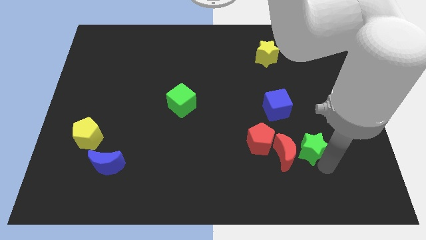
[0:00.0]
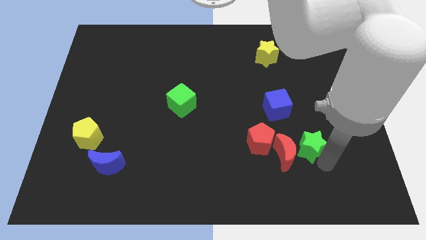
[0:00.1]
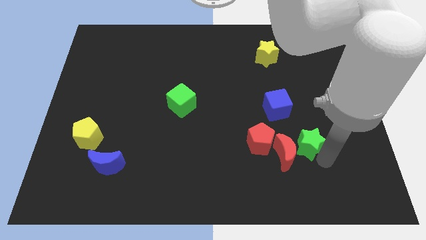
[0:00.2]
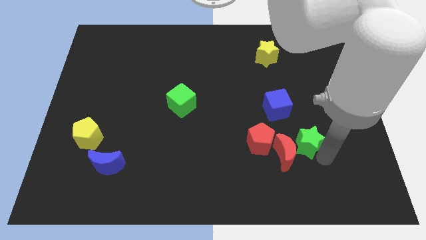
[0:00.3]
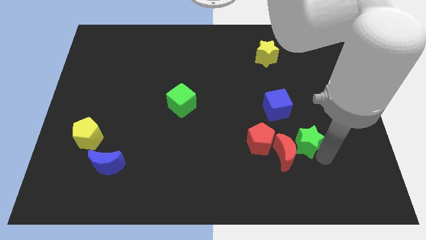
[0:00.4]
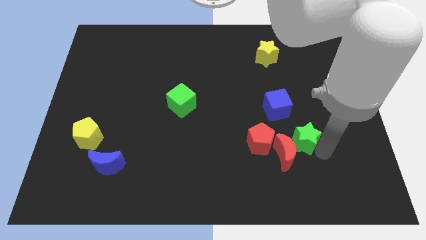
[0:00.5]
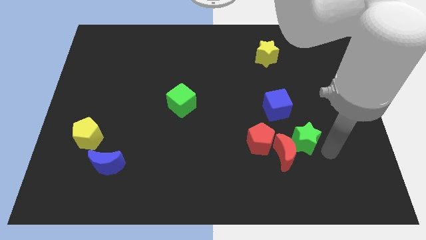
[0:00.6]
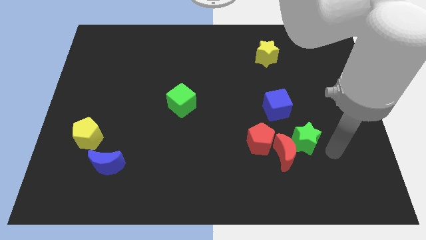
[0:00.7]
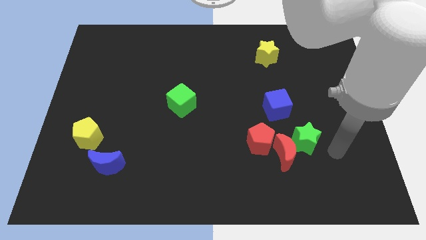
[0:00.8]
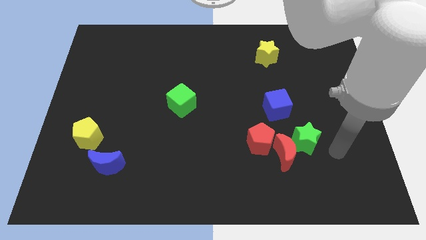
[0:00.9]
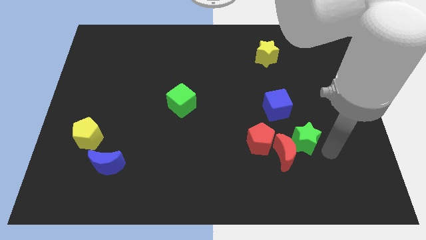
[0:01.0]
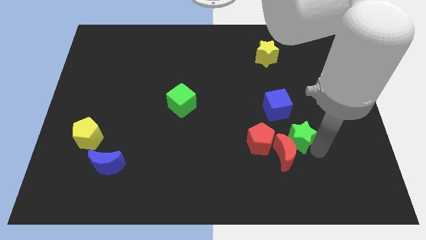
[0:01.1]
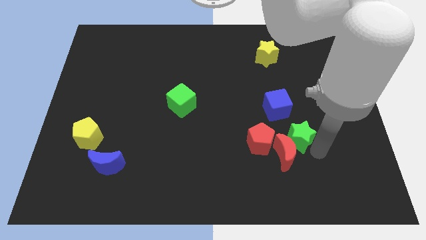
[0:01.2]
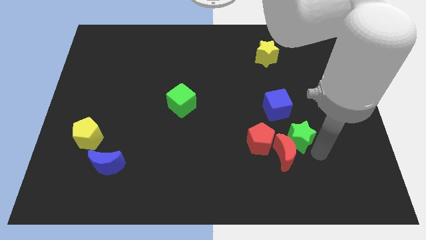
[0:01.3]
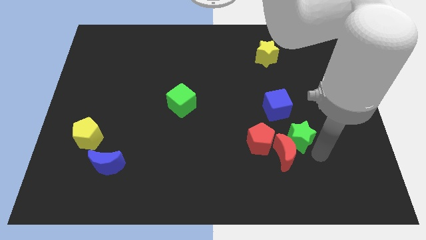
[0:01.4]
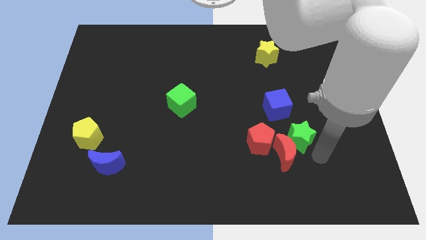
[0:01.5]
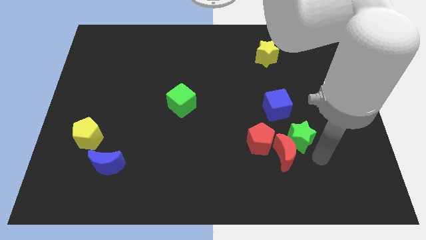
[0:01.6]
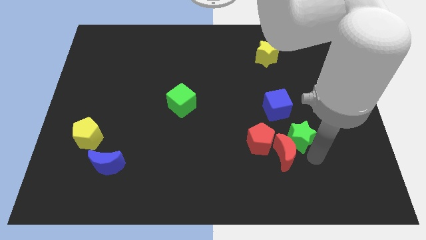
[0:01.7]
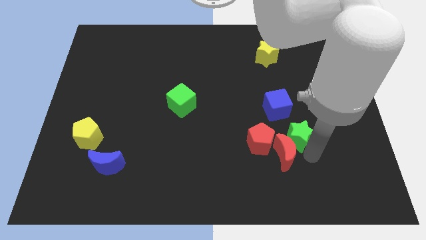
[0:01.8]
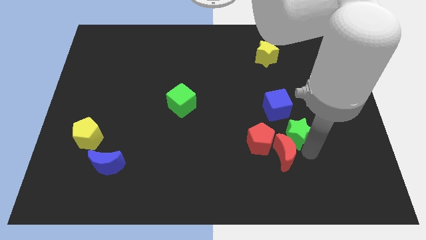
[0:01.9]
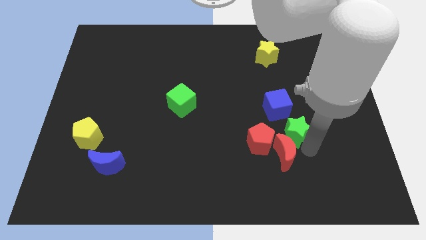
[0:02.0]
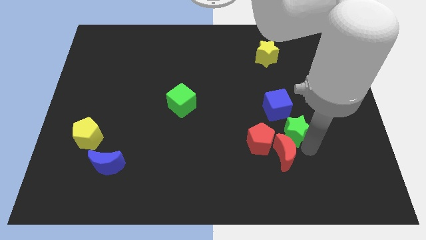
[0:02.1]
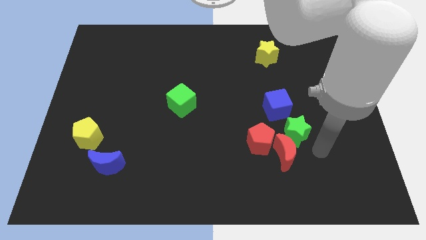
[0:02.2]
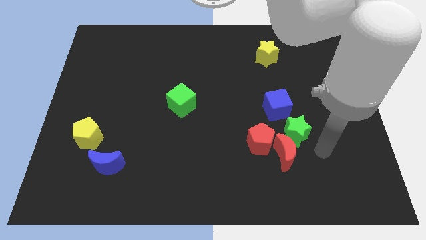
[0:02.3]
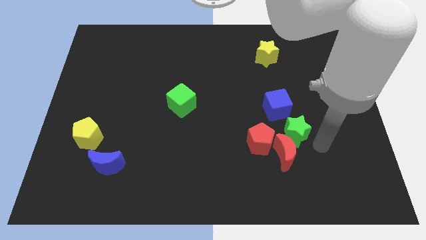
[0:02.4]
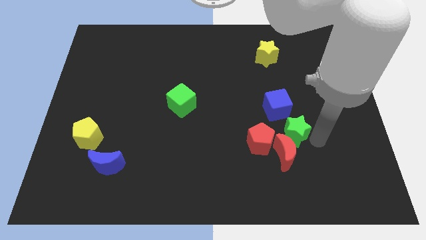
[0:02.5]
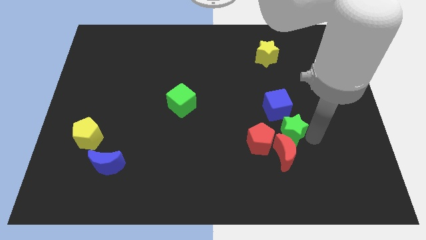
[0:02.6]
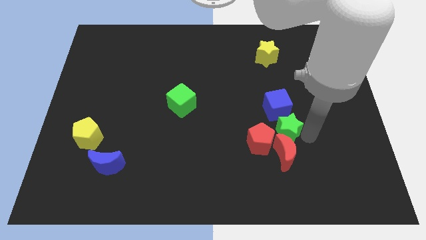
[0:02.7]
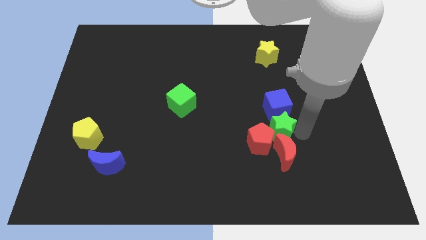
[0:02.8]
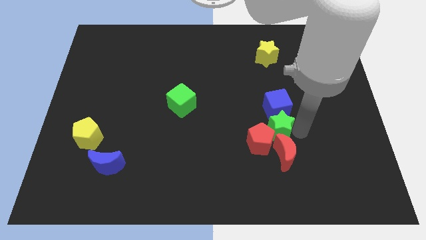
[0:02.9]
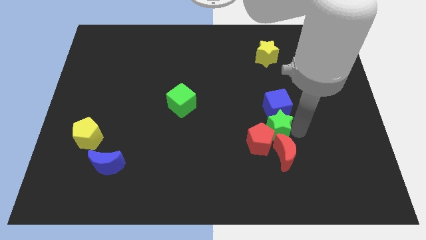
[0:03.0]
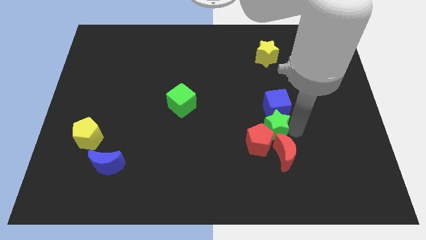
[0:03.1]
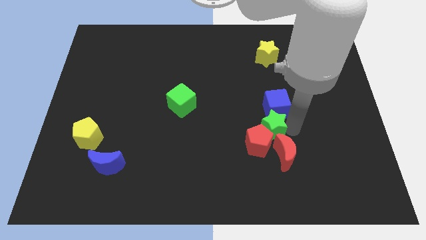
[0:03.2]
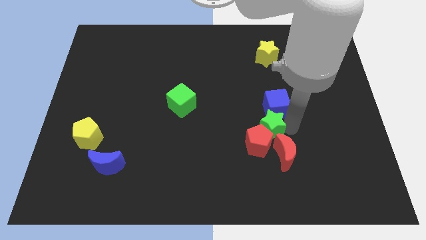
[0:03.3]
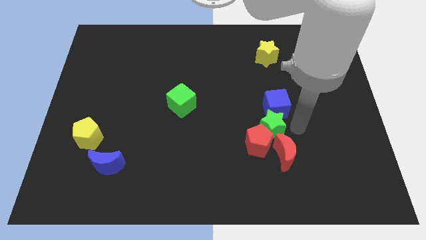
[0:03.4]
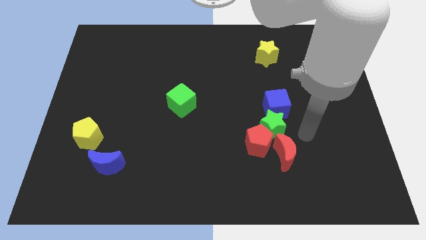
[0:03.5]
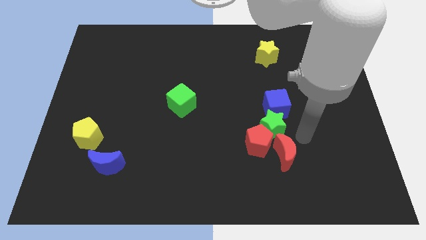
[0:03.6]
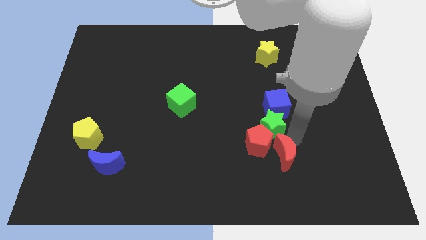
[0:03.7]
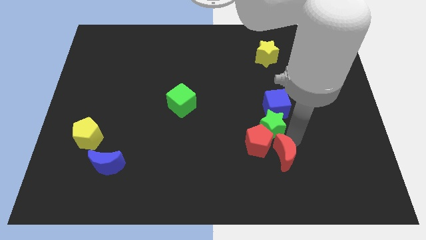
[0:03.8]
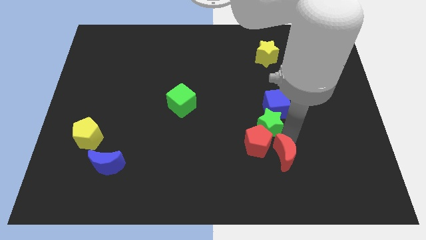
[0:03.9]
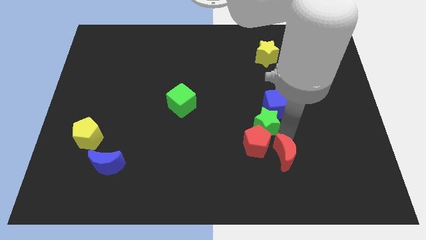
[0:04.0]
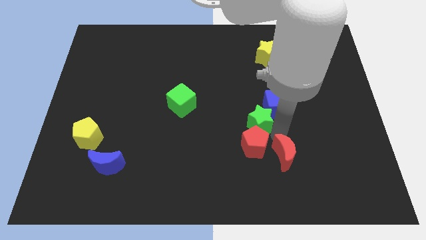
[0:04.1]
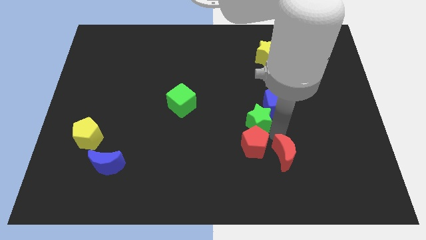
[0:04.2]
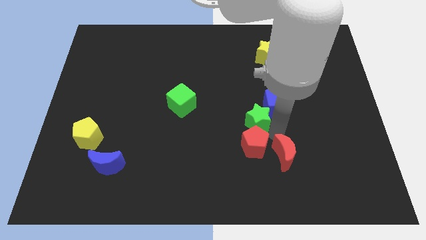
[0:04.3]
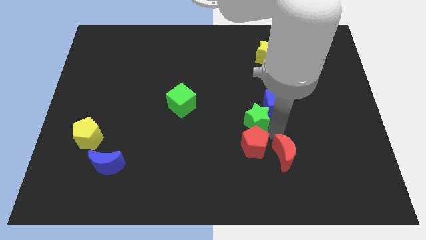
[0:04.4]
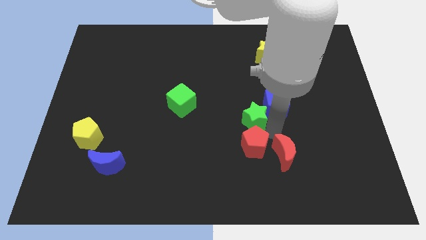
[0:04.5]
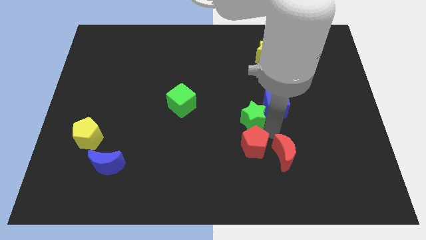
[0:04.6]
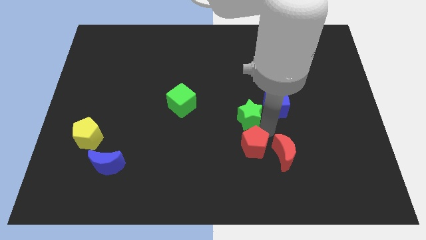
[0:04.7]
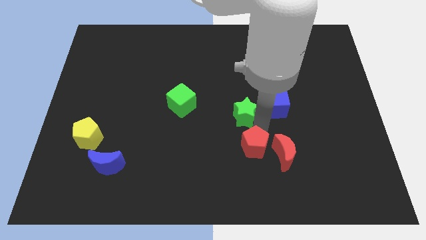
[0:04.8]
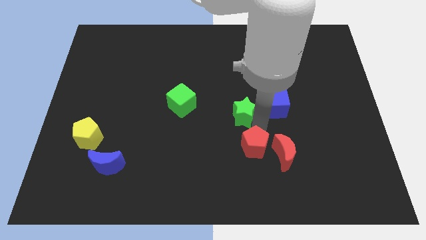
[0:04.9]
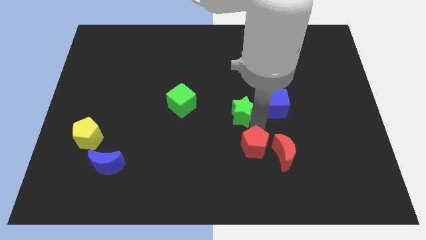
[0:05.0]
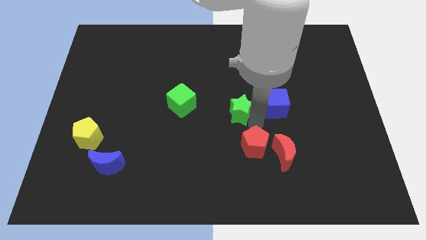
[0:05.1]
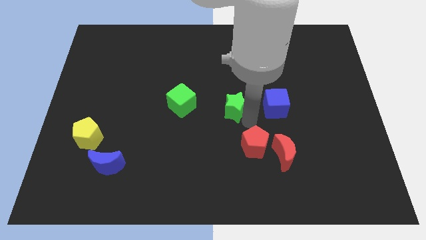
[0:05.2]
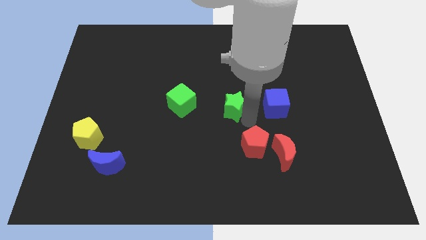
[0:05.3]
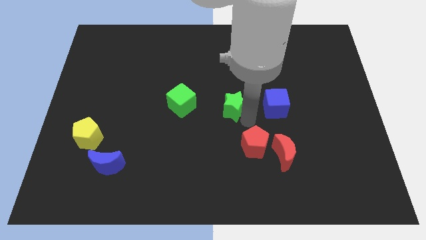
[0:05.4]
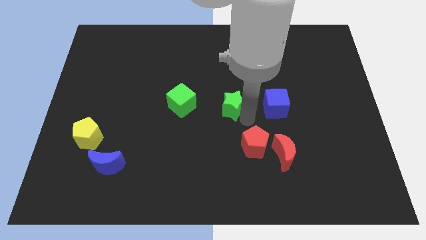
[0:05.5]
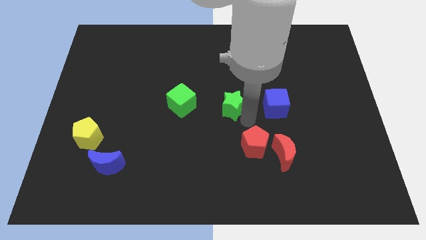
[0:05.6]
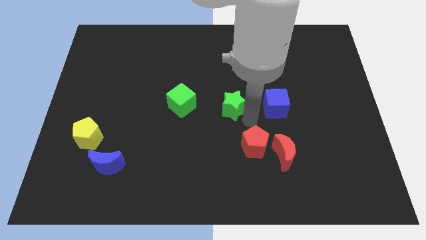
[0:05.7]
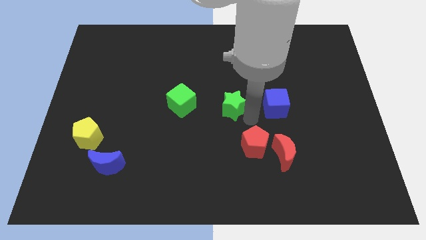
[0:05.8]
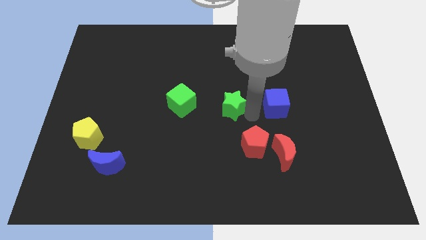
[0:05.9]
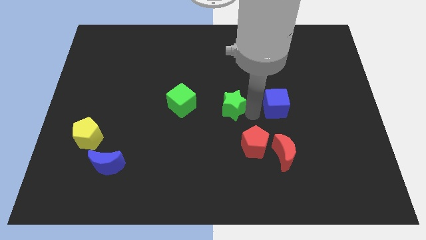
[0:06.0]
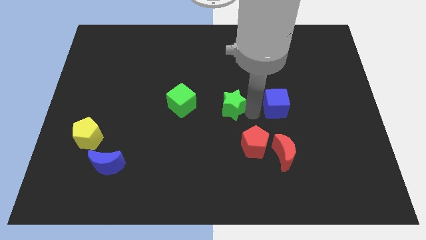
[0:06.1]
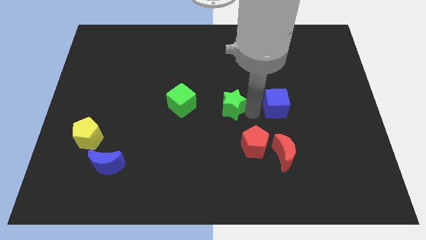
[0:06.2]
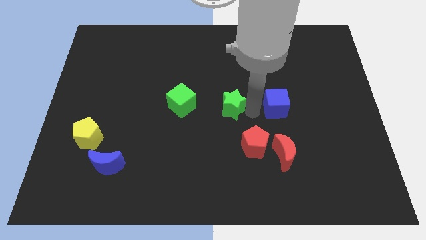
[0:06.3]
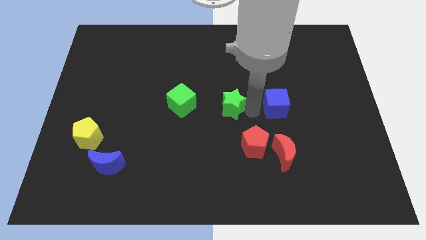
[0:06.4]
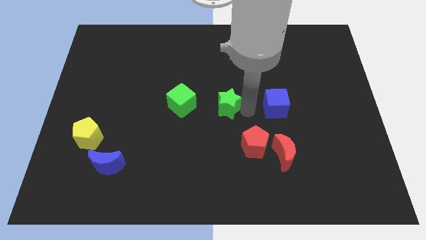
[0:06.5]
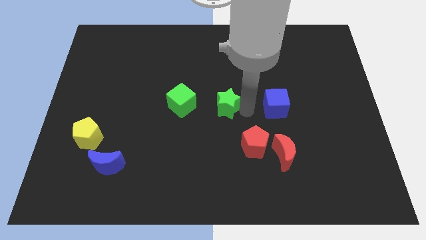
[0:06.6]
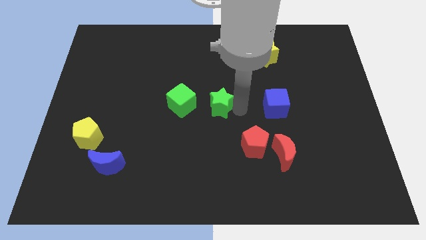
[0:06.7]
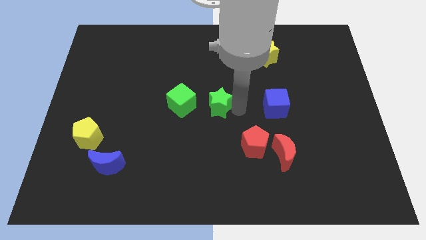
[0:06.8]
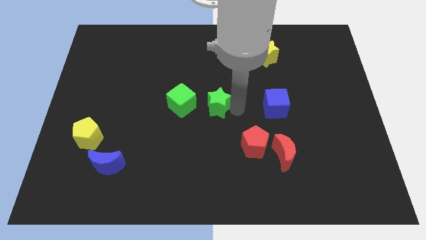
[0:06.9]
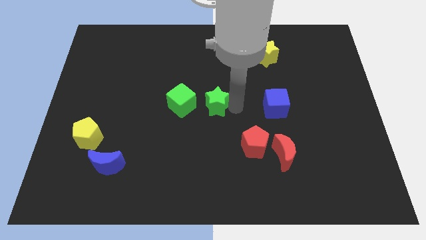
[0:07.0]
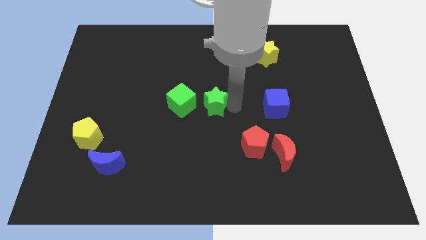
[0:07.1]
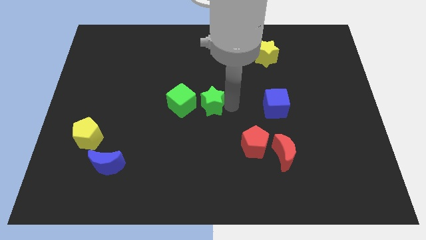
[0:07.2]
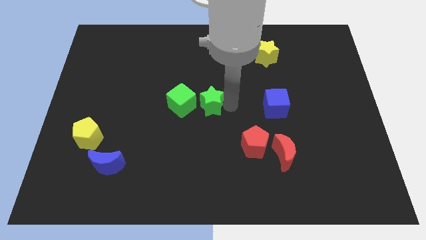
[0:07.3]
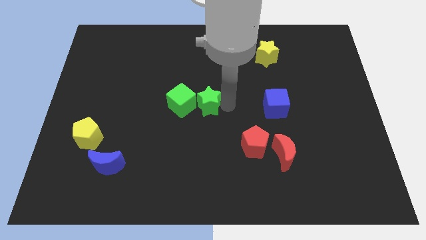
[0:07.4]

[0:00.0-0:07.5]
push the green star to the right side of the green cube

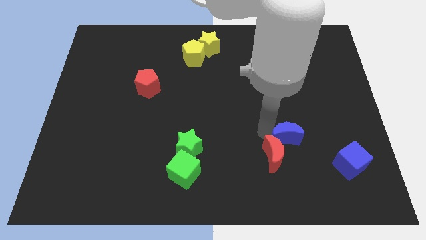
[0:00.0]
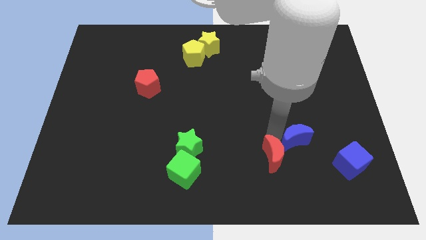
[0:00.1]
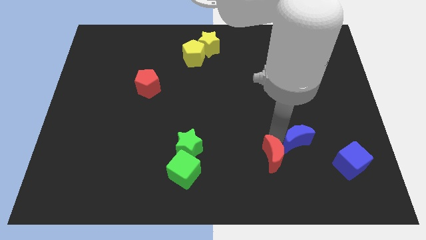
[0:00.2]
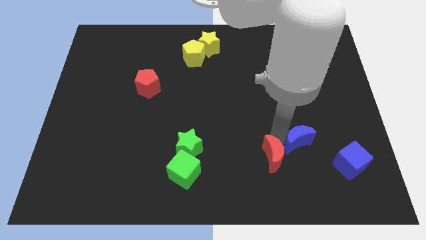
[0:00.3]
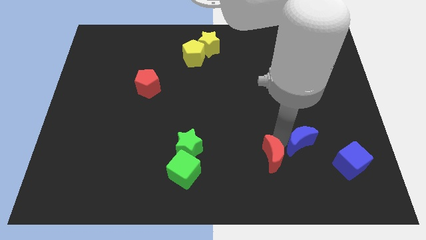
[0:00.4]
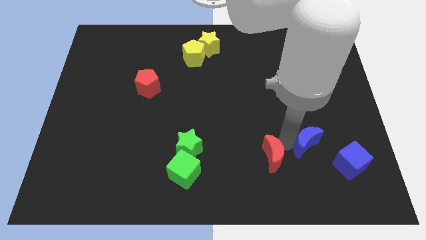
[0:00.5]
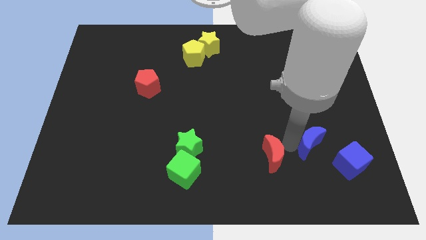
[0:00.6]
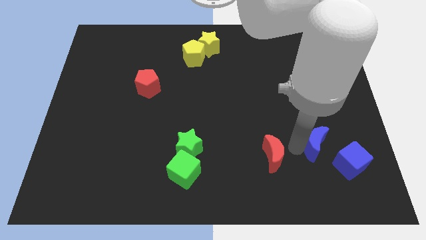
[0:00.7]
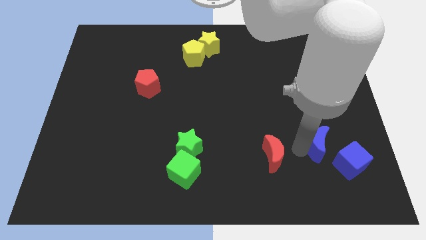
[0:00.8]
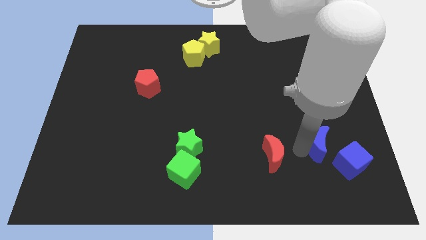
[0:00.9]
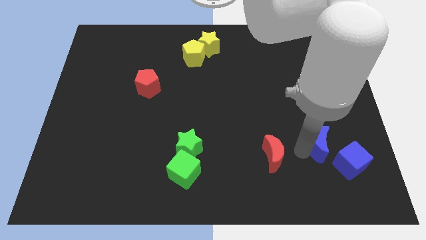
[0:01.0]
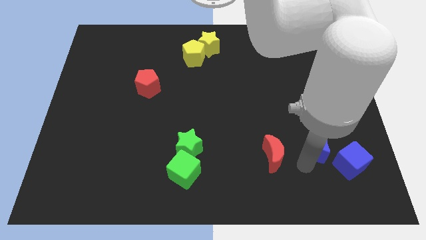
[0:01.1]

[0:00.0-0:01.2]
move blue moon towards blue cube

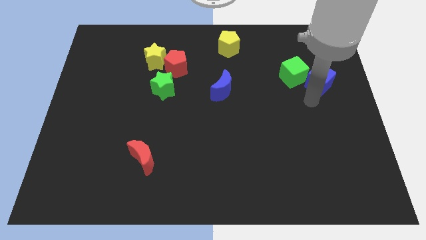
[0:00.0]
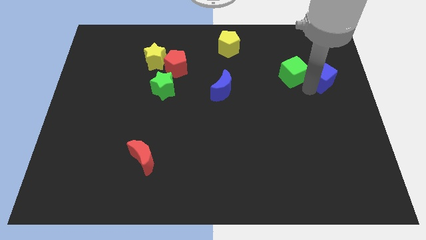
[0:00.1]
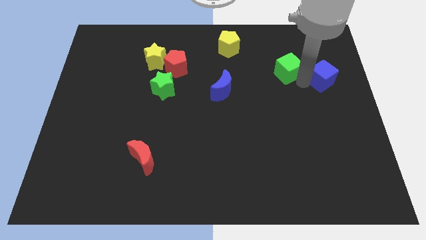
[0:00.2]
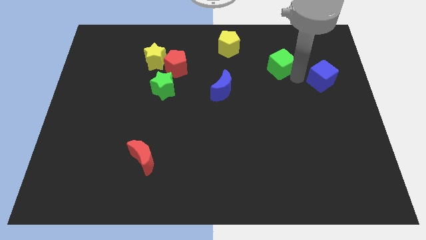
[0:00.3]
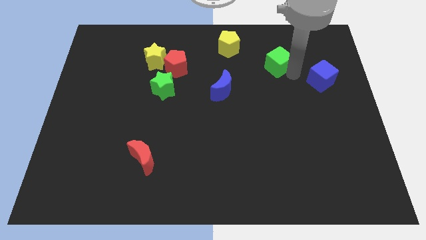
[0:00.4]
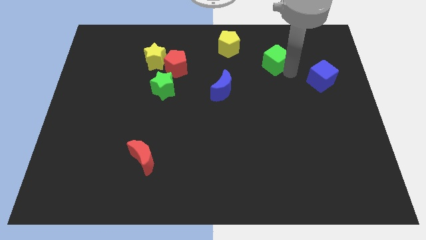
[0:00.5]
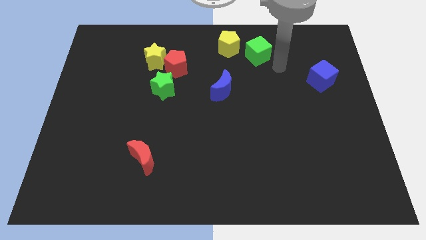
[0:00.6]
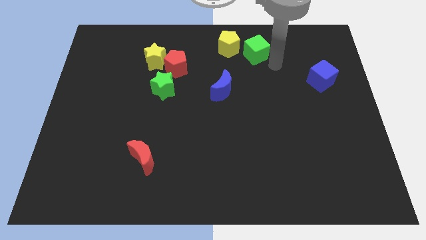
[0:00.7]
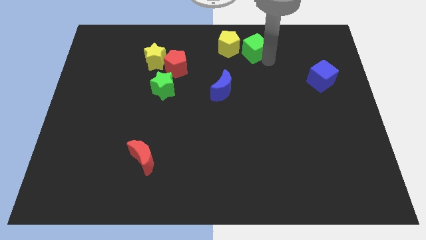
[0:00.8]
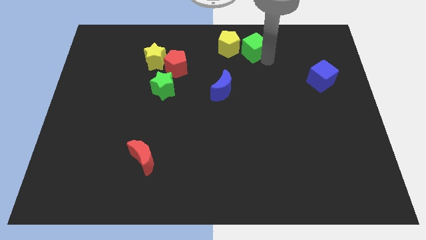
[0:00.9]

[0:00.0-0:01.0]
place green cube beside yellow pentagon
